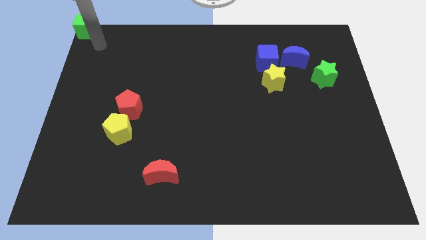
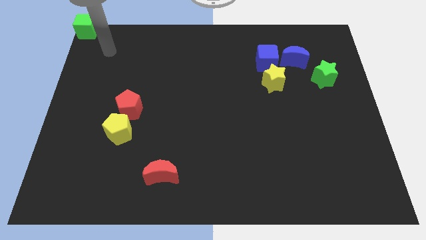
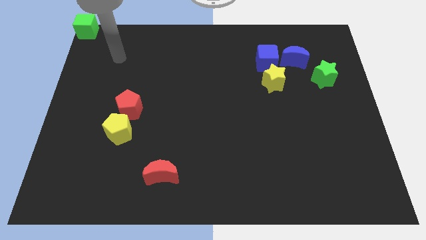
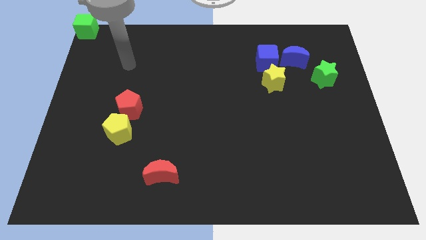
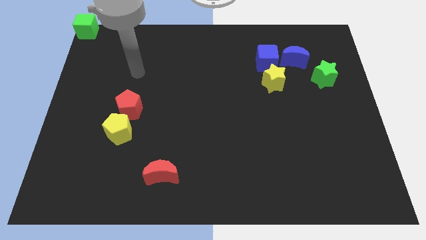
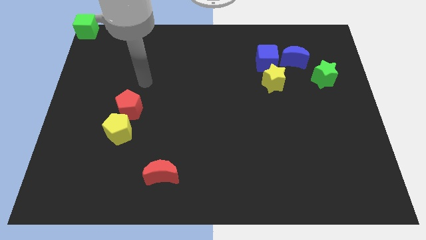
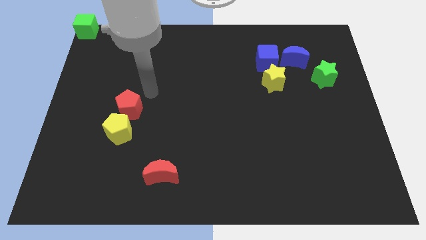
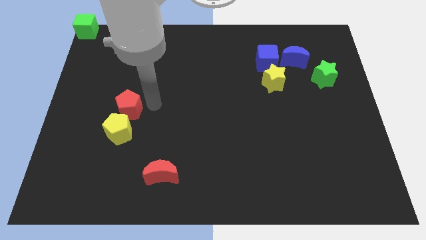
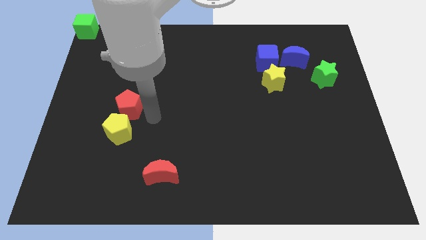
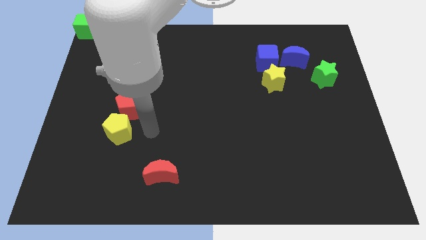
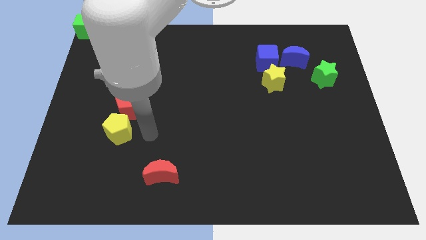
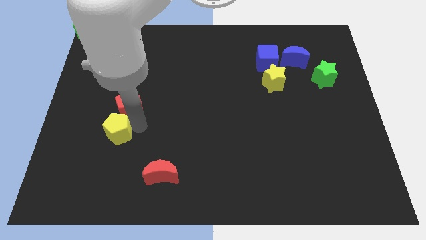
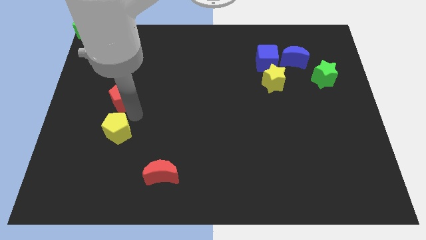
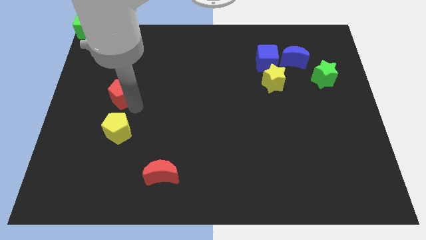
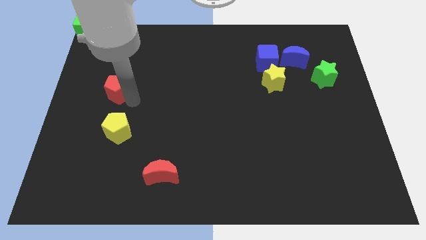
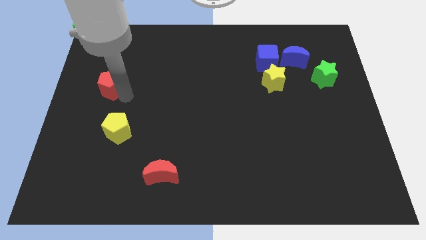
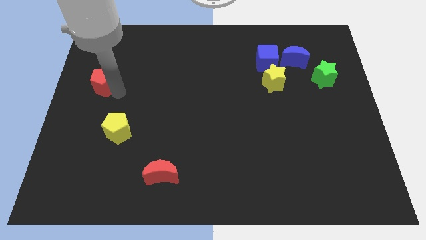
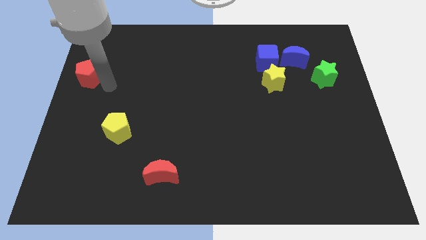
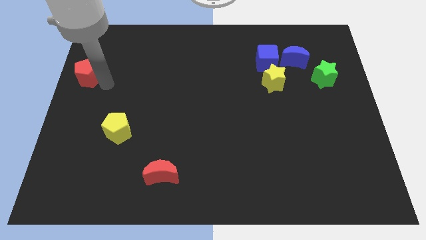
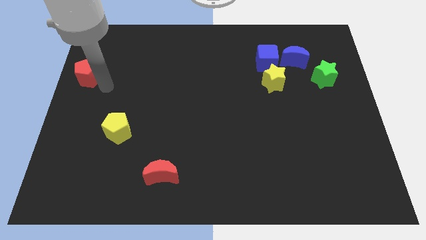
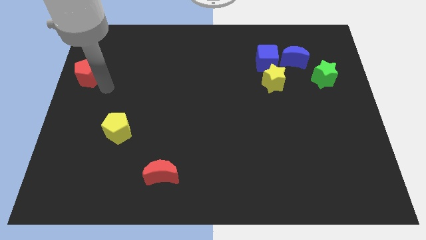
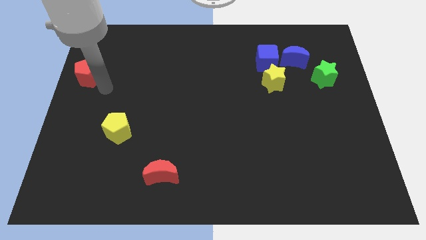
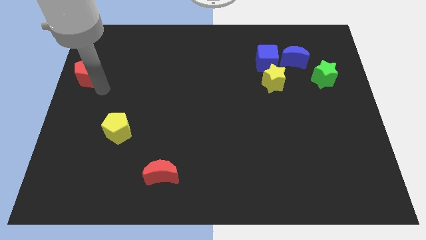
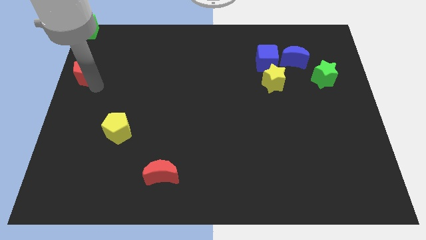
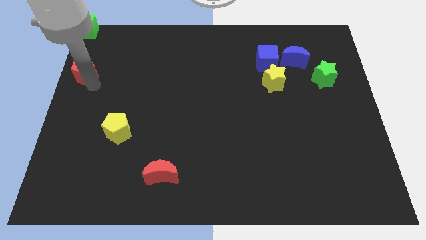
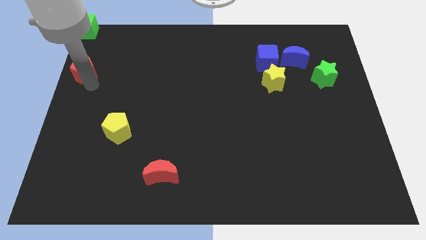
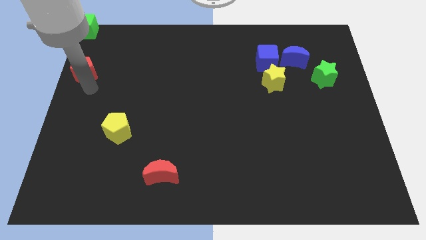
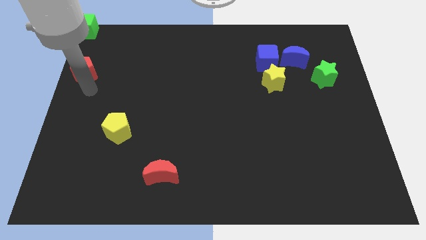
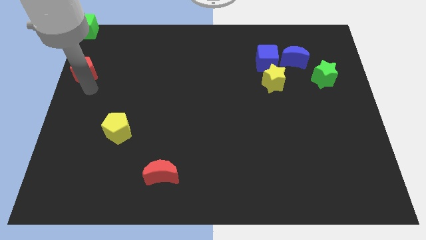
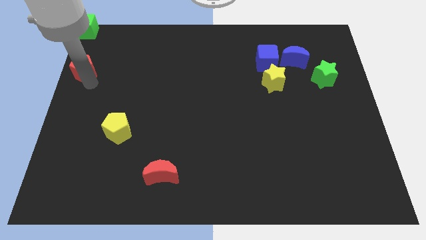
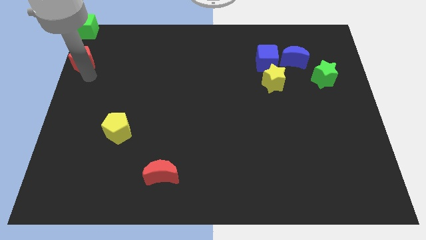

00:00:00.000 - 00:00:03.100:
move the red pentagon to the bottom of the green cube

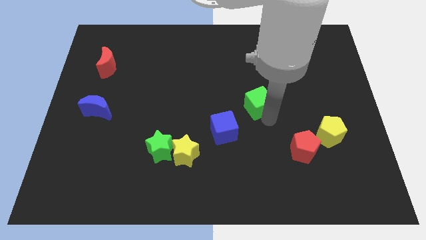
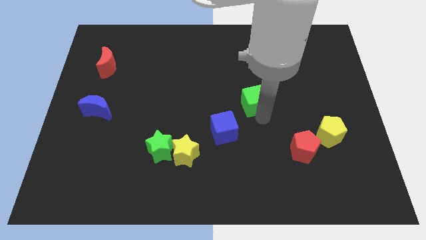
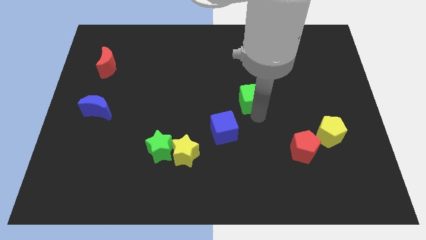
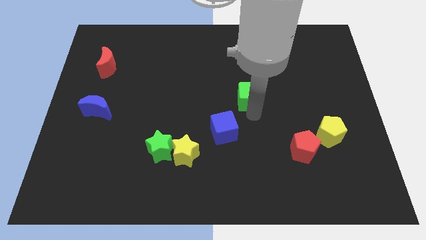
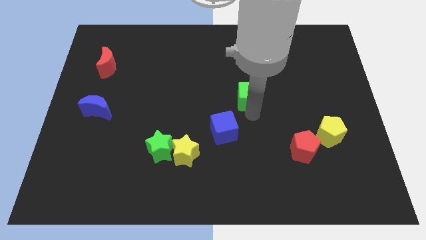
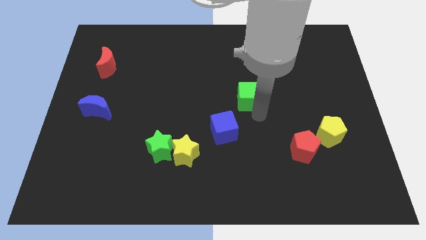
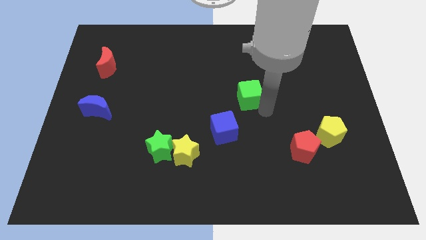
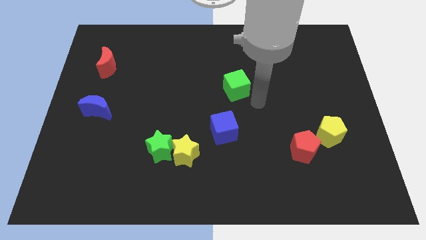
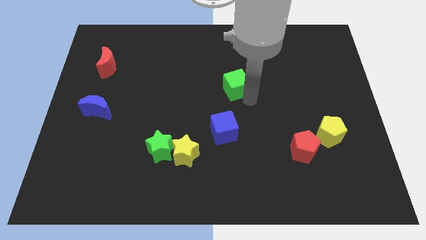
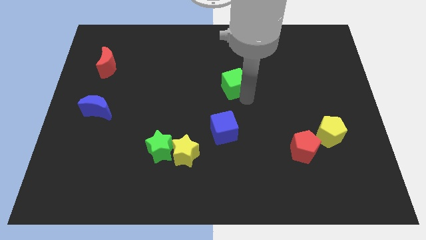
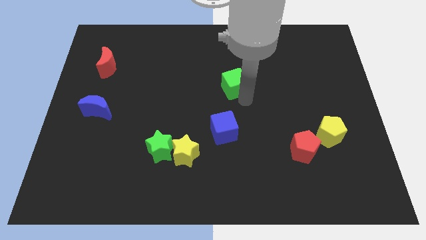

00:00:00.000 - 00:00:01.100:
place green cube above blue cube

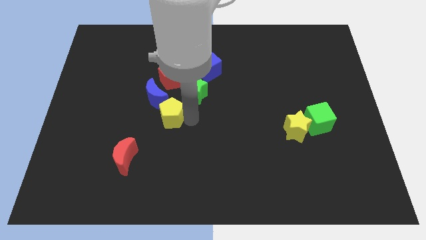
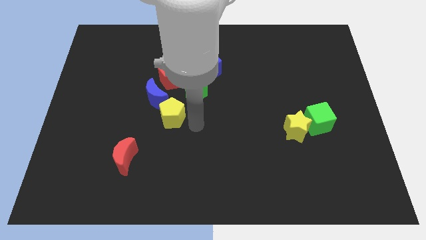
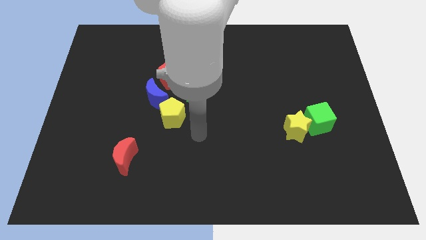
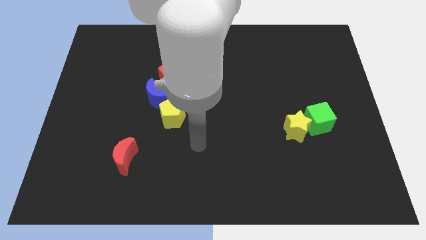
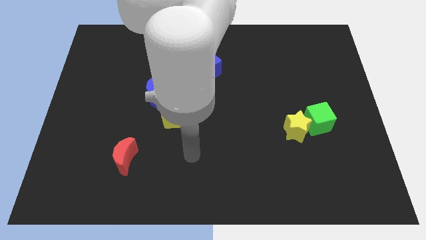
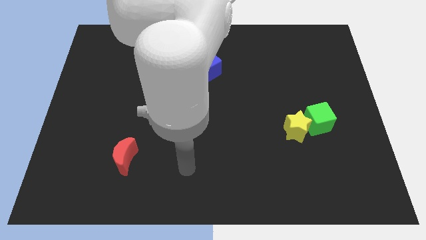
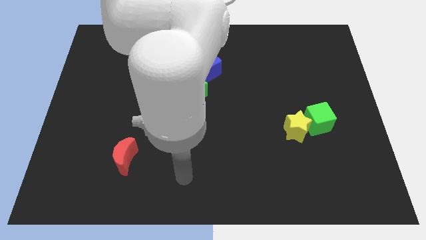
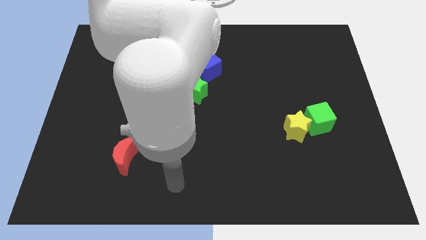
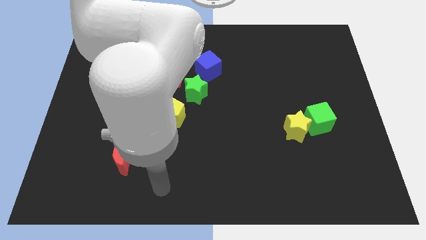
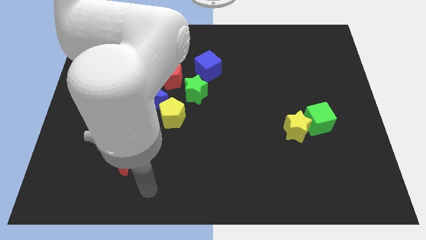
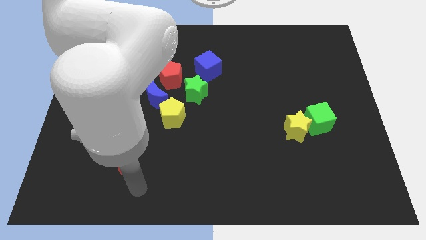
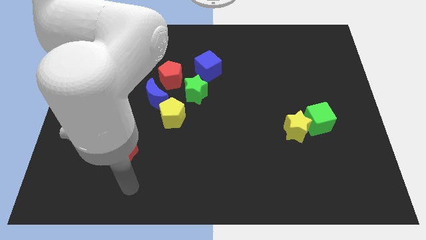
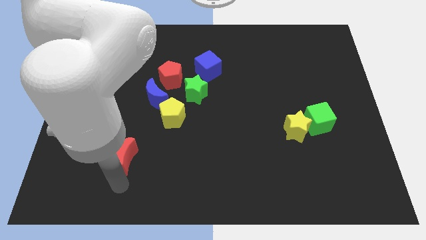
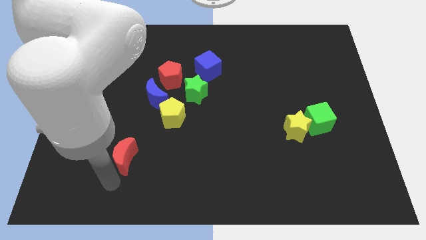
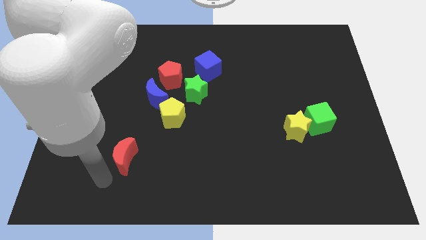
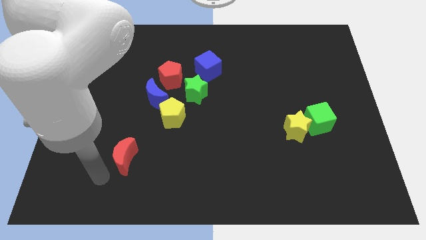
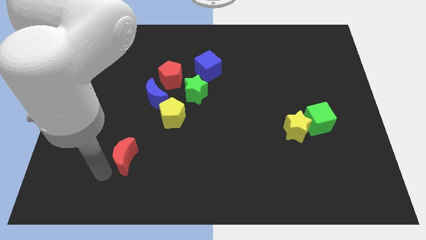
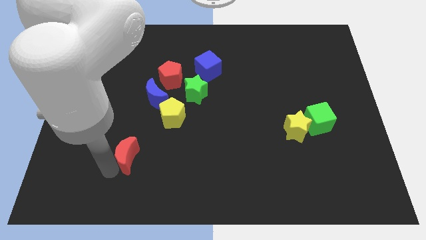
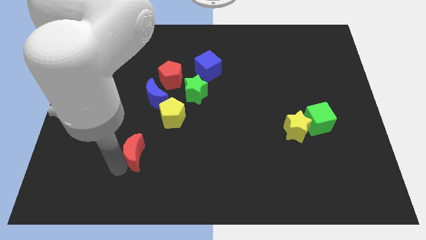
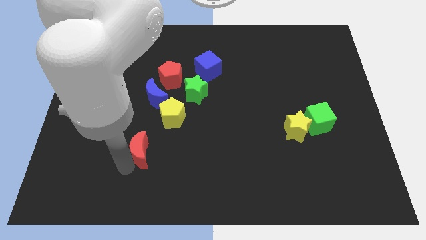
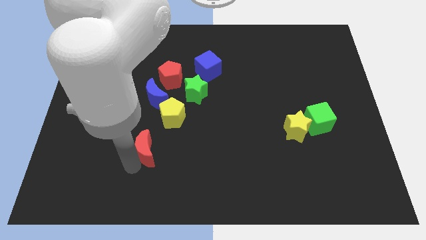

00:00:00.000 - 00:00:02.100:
slide the red moon towards the bottom left of the yellow pentagon

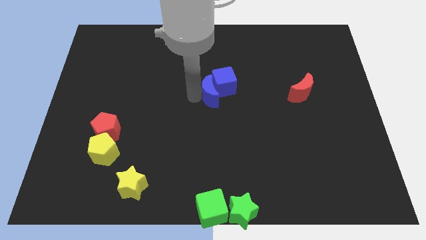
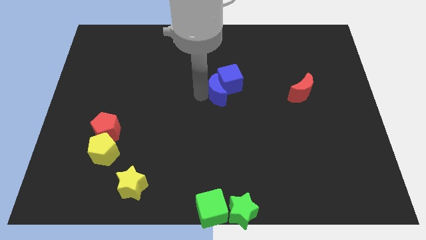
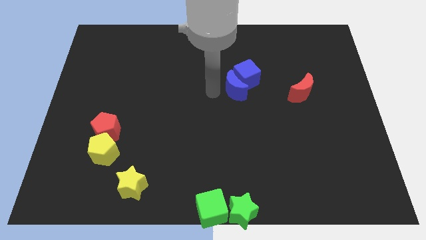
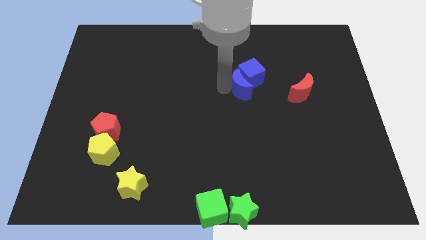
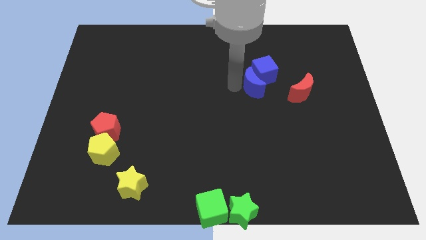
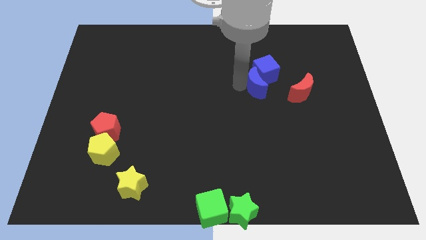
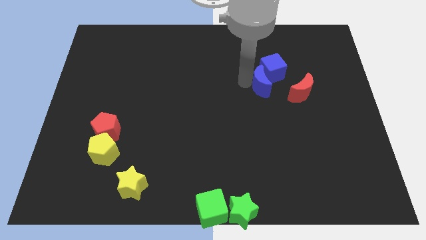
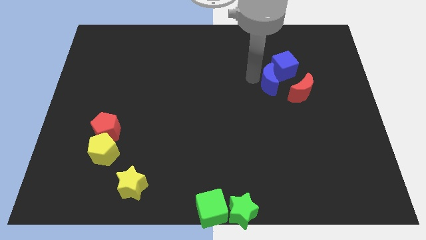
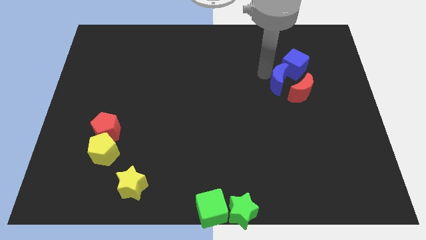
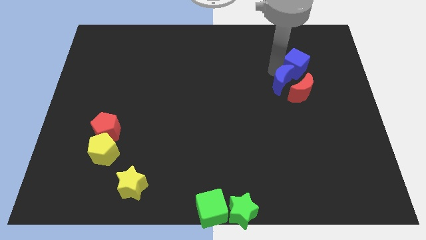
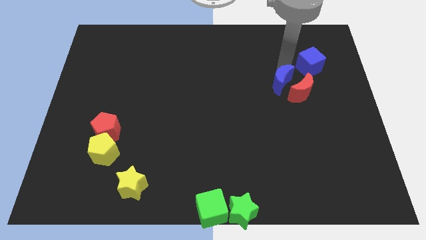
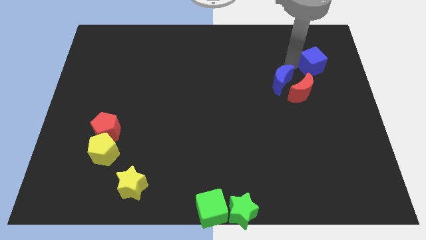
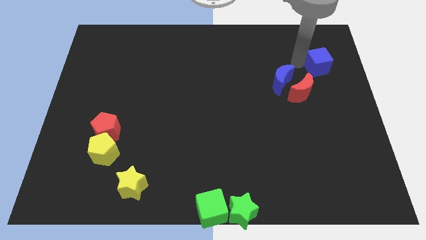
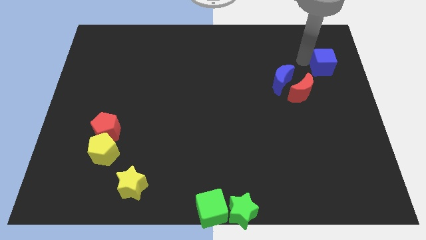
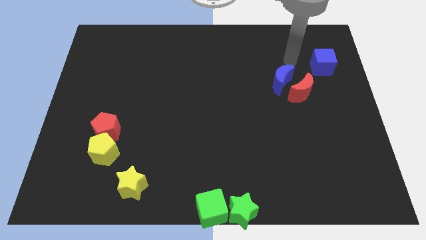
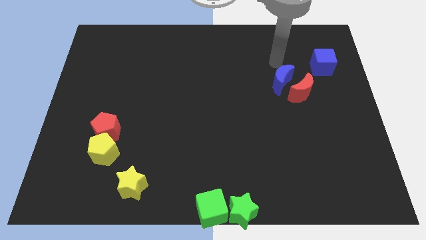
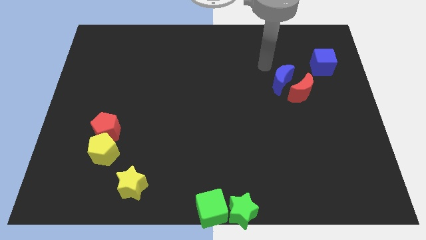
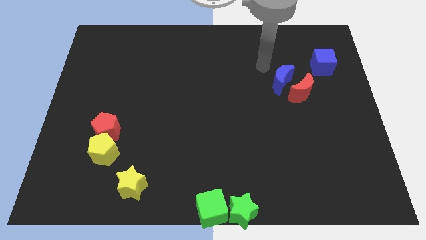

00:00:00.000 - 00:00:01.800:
move the blue blocks towards the right side of the board

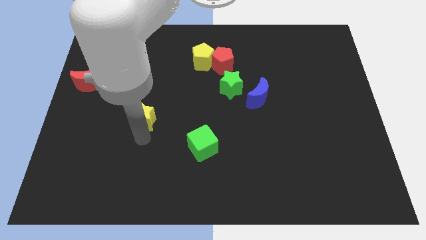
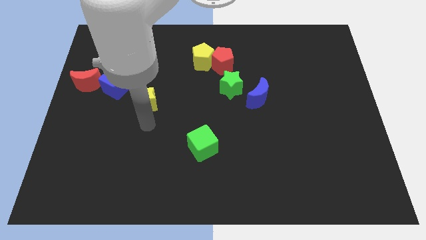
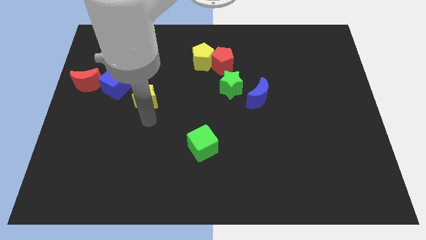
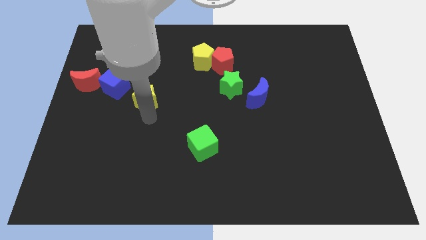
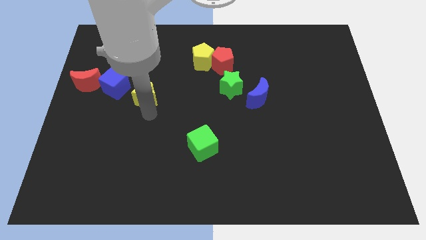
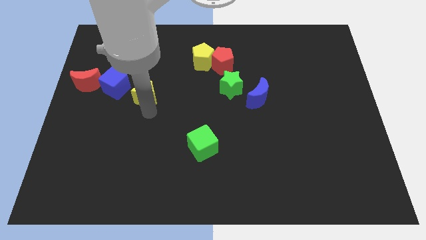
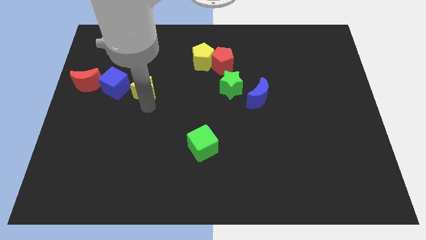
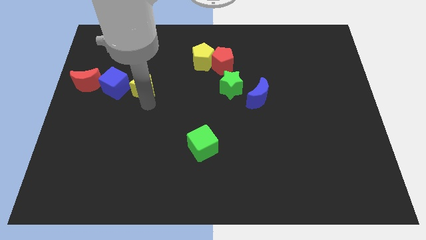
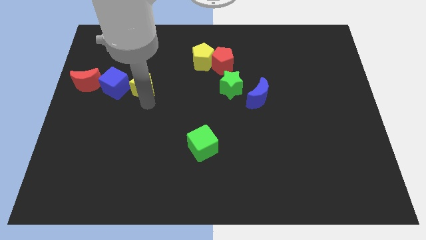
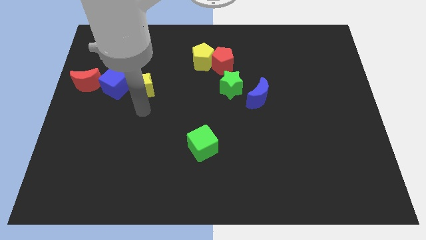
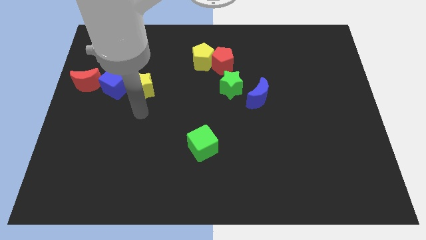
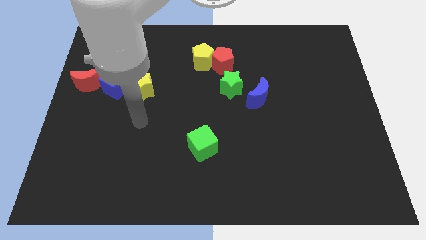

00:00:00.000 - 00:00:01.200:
place the yellow star to the right of the blue cube
